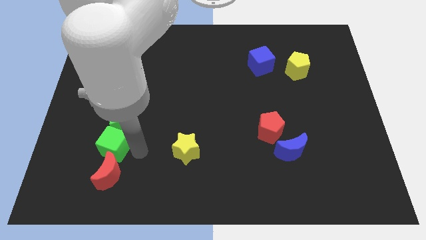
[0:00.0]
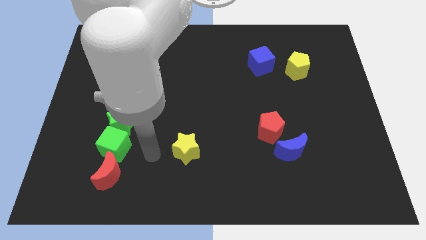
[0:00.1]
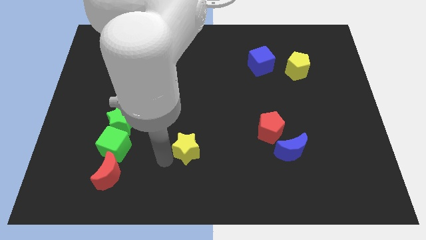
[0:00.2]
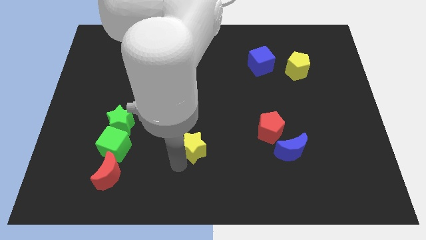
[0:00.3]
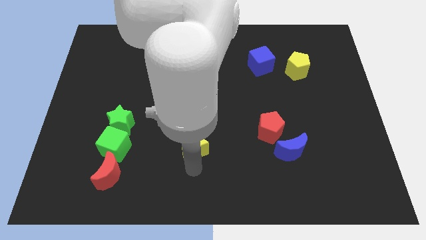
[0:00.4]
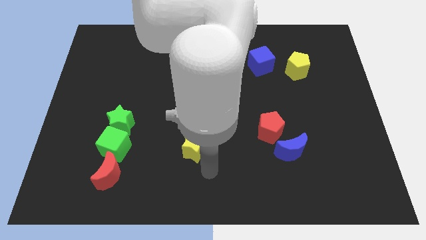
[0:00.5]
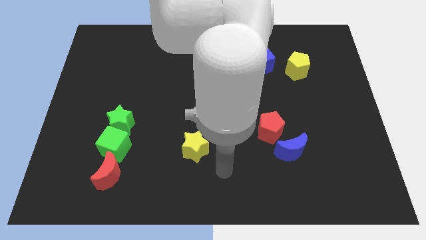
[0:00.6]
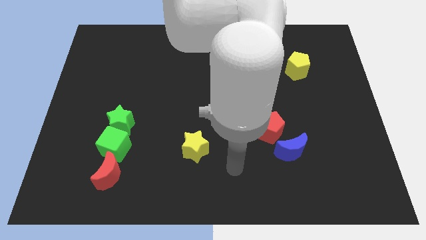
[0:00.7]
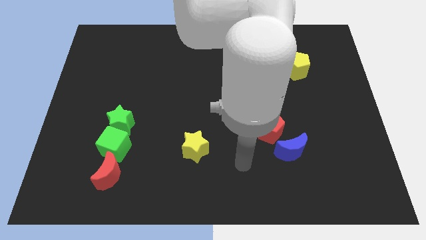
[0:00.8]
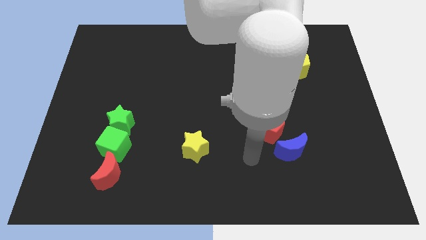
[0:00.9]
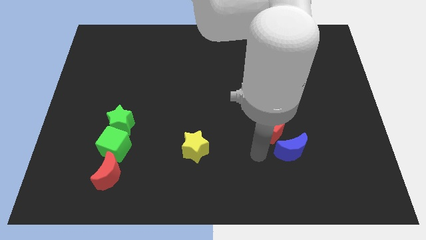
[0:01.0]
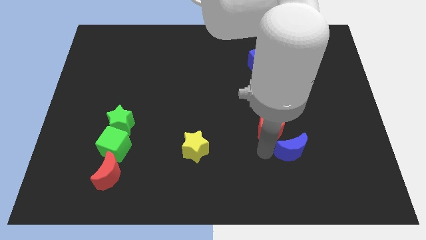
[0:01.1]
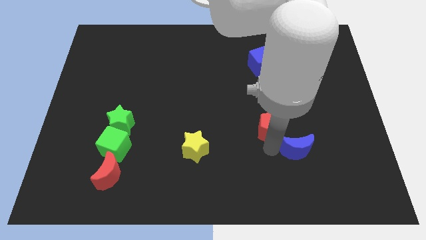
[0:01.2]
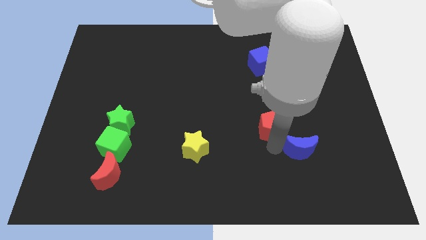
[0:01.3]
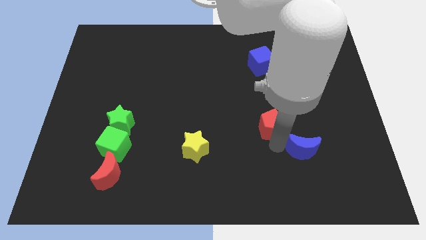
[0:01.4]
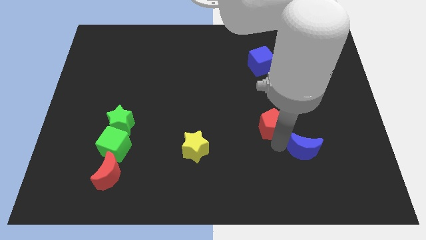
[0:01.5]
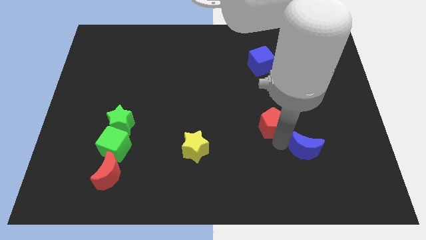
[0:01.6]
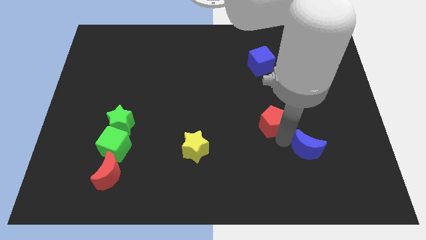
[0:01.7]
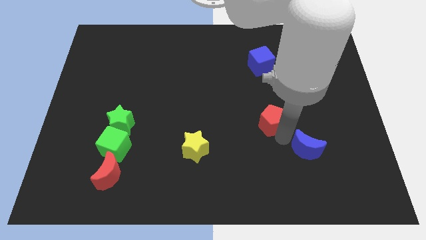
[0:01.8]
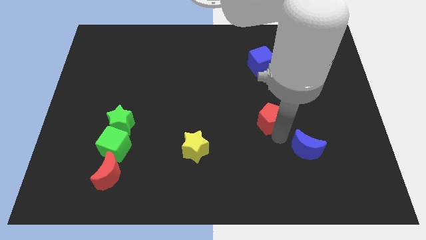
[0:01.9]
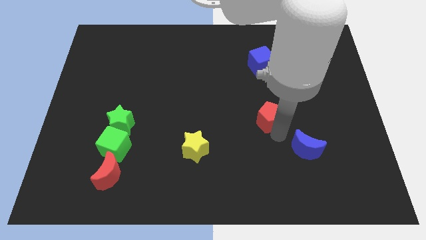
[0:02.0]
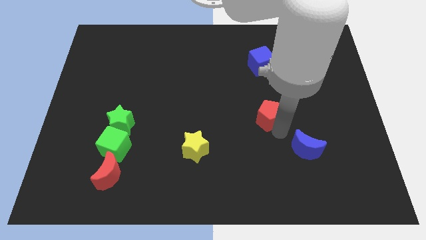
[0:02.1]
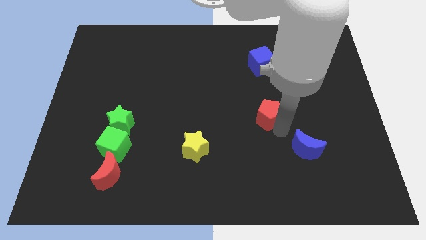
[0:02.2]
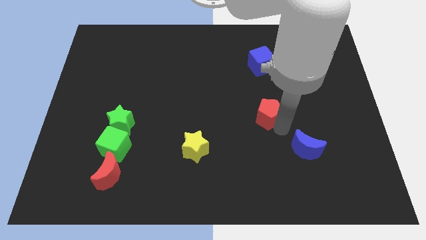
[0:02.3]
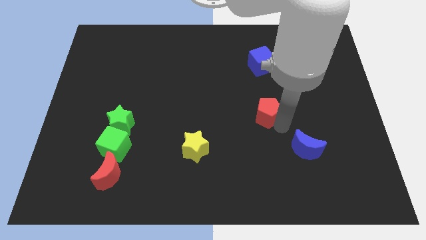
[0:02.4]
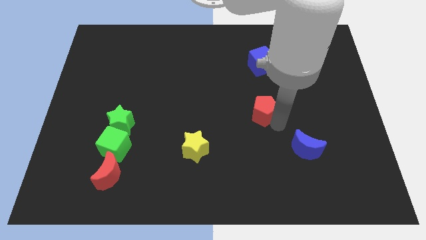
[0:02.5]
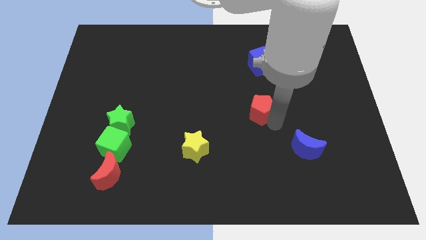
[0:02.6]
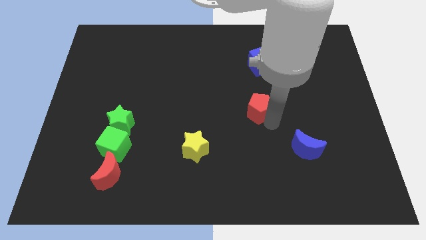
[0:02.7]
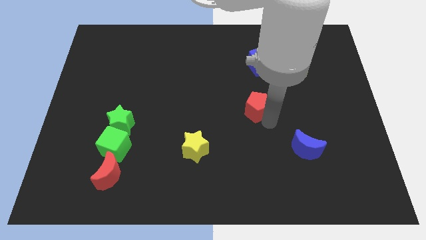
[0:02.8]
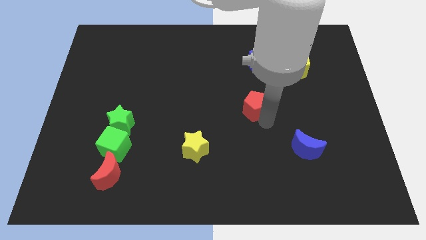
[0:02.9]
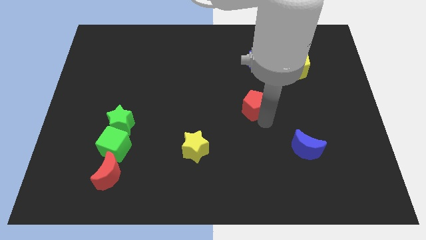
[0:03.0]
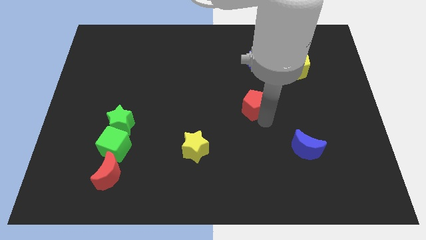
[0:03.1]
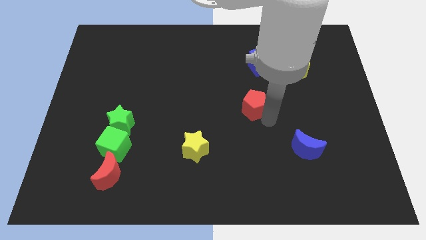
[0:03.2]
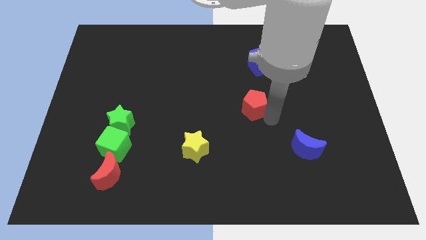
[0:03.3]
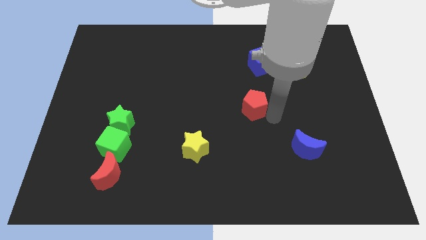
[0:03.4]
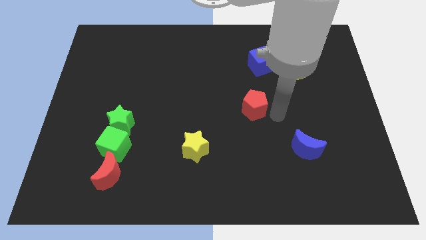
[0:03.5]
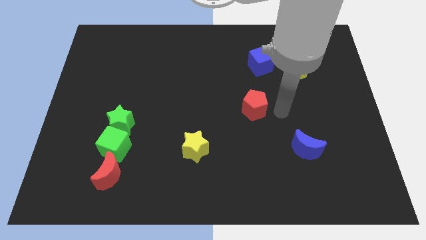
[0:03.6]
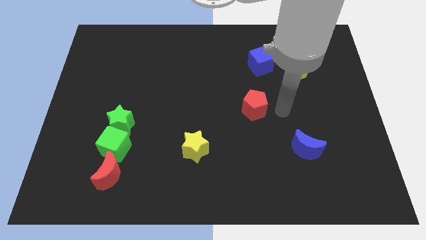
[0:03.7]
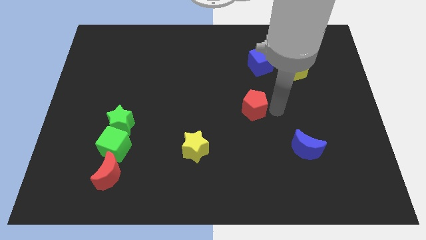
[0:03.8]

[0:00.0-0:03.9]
separate the red pentagon from the blue moon

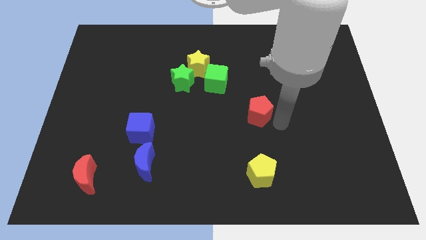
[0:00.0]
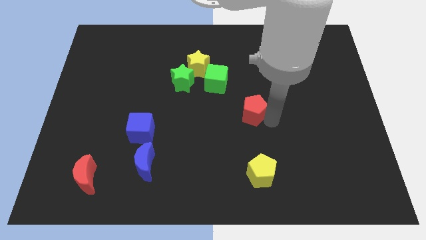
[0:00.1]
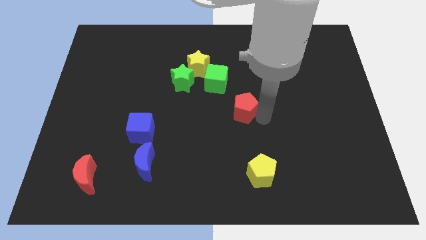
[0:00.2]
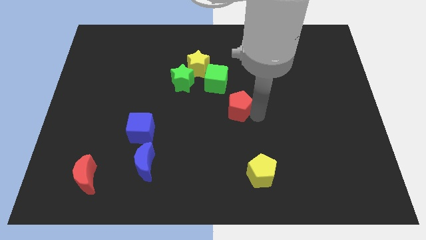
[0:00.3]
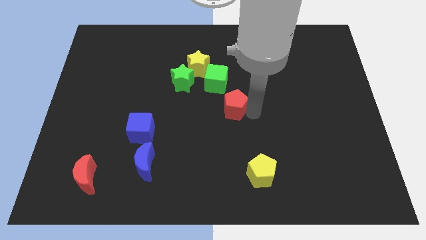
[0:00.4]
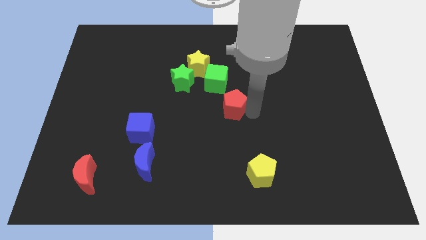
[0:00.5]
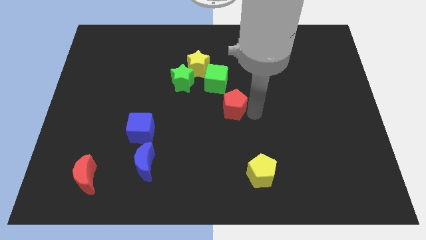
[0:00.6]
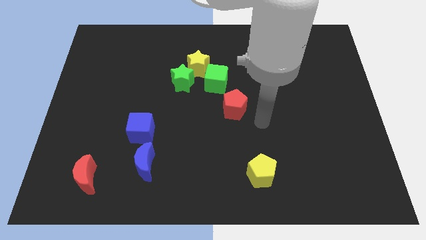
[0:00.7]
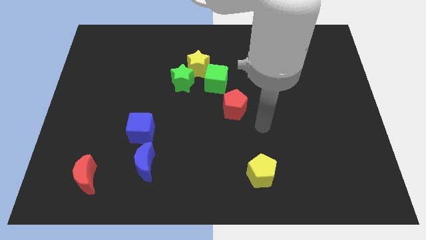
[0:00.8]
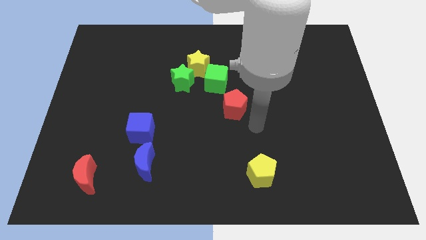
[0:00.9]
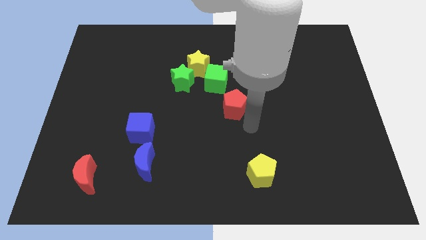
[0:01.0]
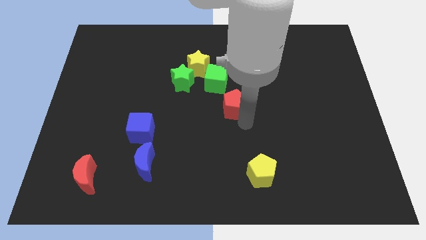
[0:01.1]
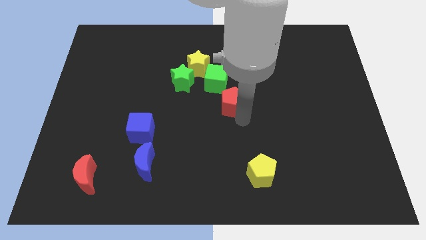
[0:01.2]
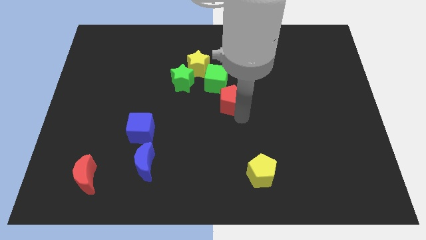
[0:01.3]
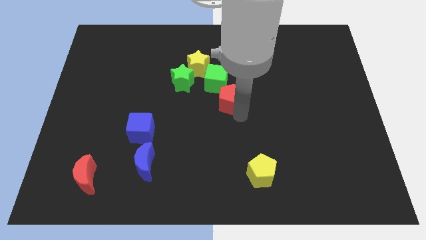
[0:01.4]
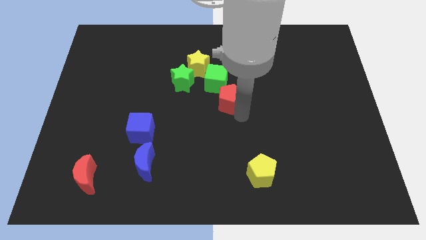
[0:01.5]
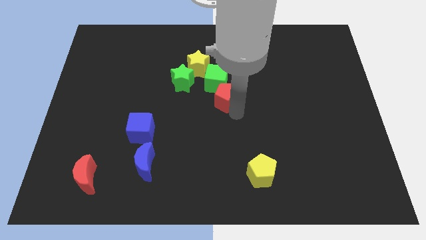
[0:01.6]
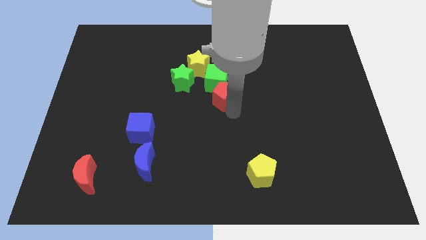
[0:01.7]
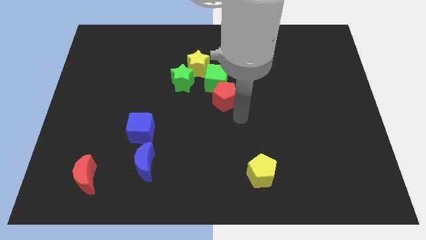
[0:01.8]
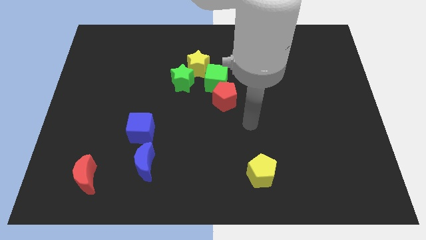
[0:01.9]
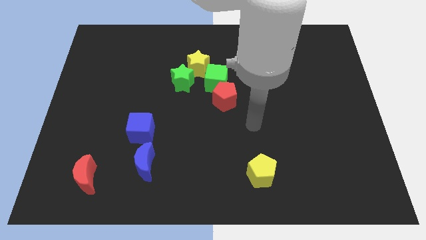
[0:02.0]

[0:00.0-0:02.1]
move red pentagon into green cube

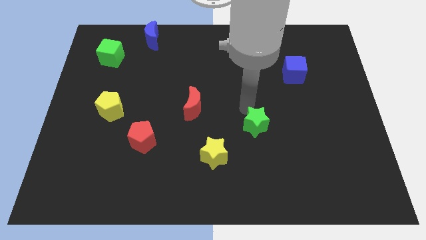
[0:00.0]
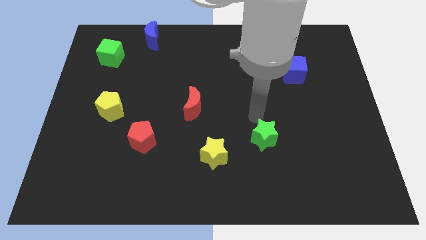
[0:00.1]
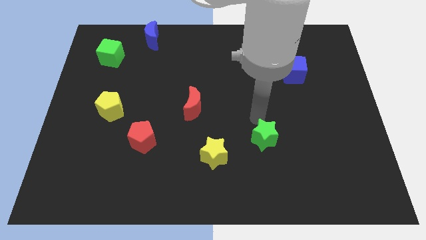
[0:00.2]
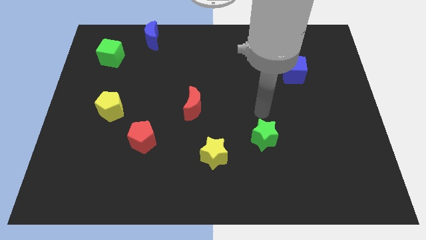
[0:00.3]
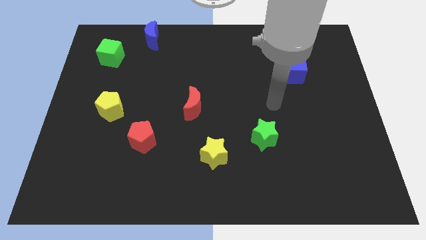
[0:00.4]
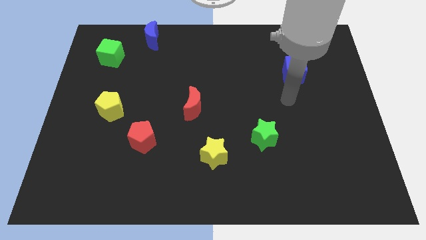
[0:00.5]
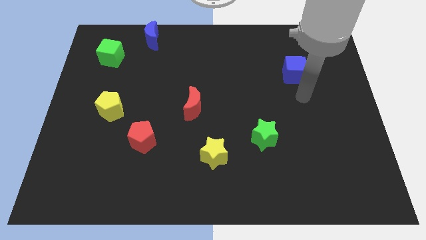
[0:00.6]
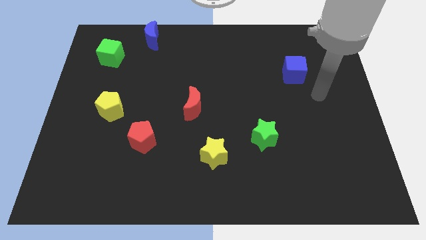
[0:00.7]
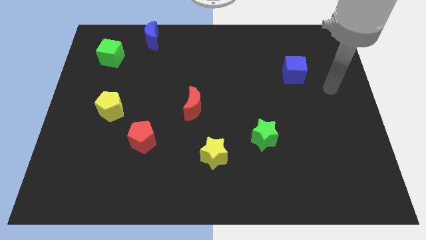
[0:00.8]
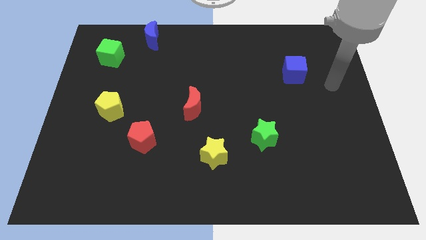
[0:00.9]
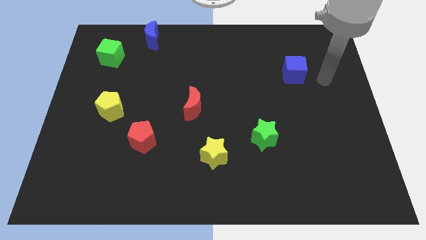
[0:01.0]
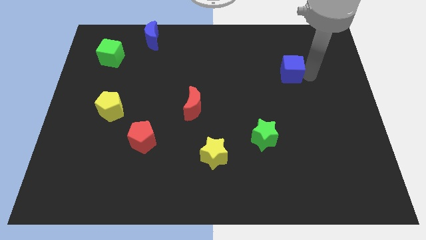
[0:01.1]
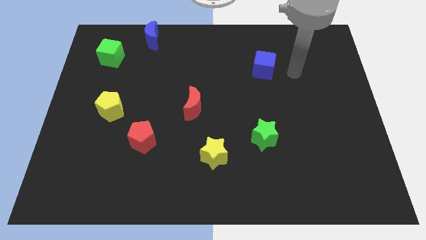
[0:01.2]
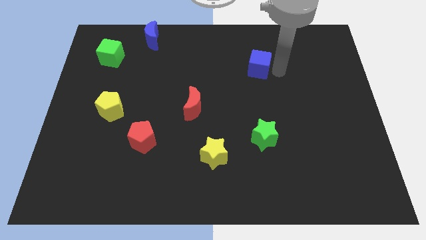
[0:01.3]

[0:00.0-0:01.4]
move the green star and the blue cube vertical to each other

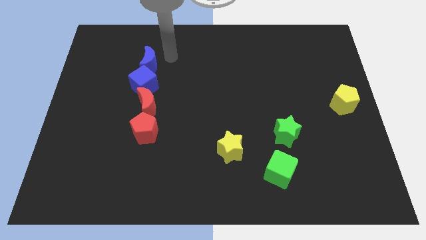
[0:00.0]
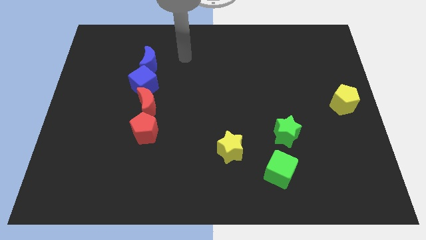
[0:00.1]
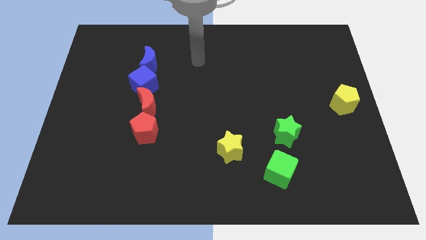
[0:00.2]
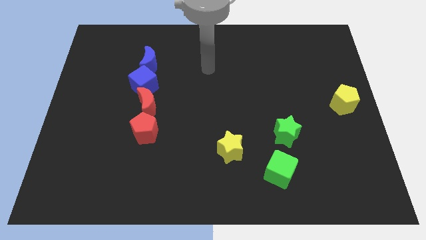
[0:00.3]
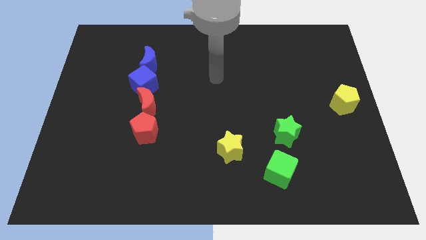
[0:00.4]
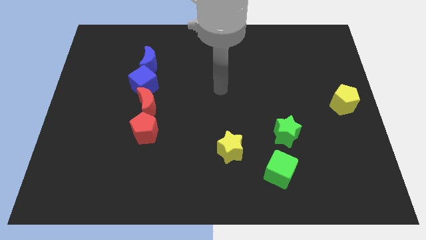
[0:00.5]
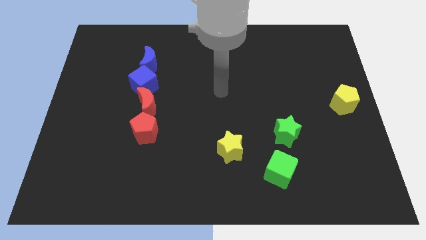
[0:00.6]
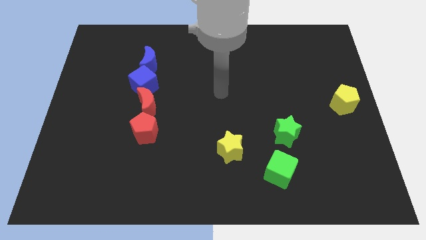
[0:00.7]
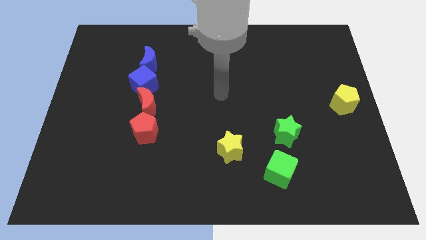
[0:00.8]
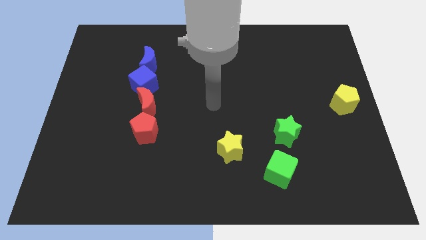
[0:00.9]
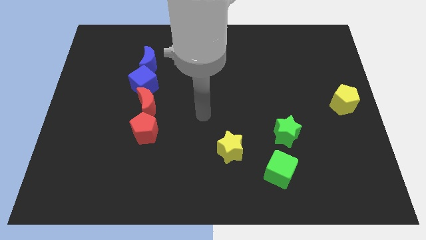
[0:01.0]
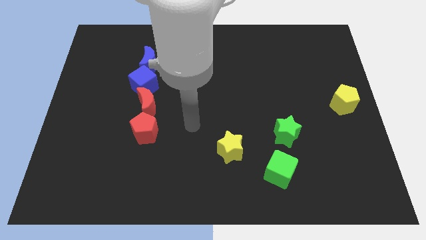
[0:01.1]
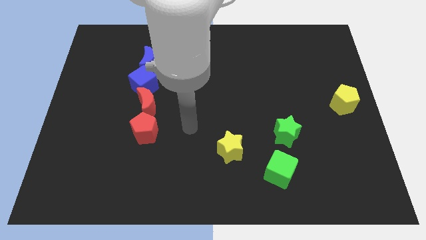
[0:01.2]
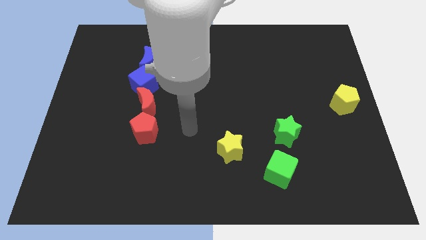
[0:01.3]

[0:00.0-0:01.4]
move your arm to the right of red pentagon
